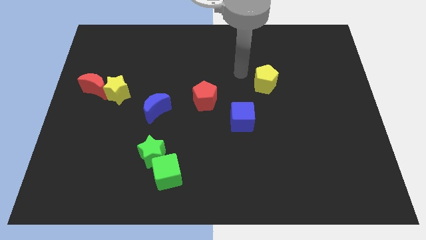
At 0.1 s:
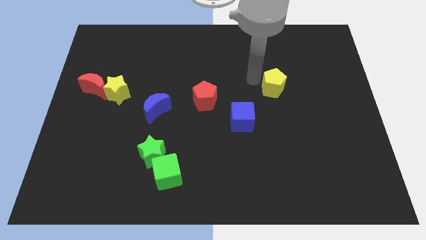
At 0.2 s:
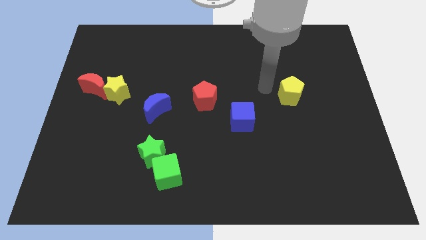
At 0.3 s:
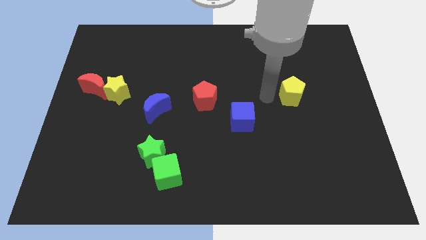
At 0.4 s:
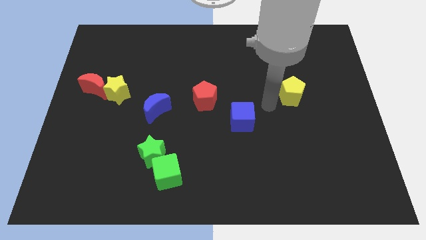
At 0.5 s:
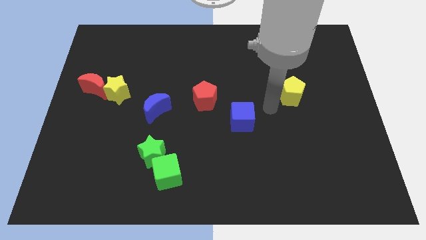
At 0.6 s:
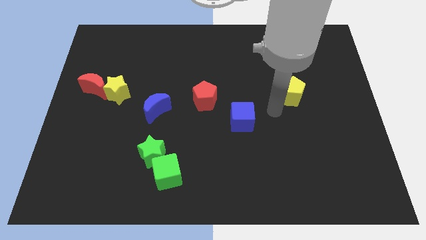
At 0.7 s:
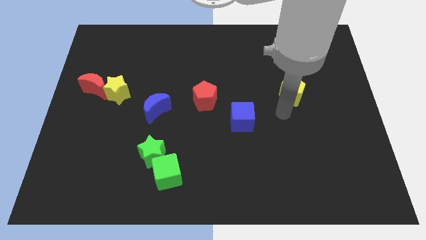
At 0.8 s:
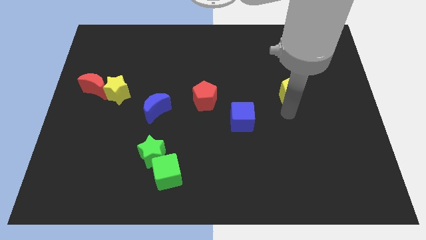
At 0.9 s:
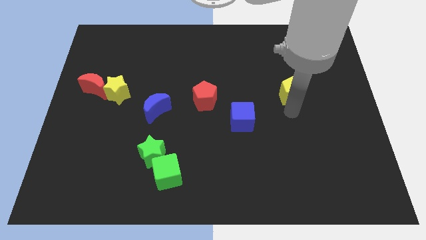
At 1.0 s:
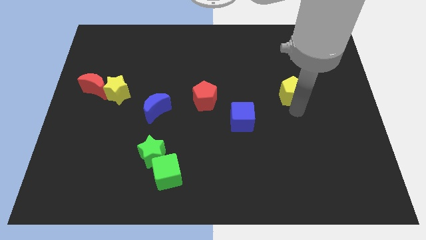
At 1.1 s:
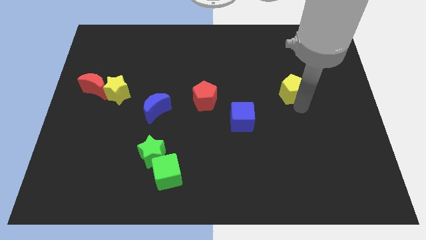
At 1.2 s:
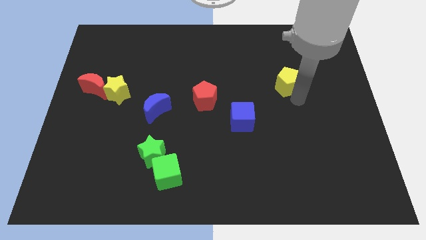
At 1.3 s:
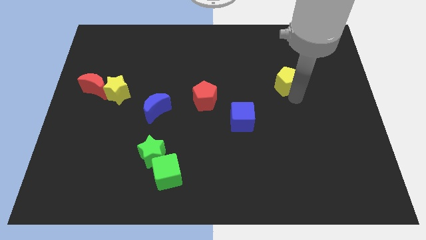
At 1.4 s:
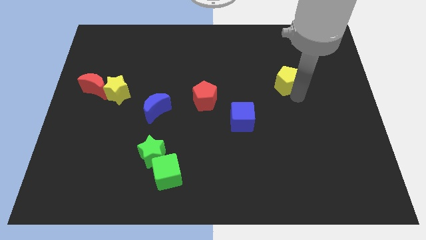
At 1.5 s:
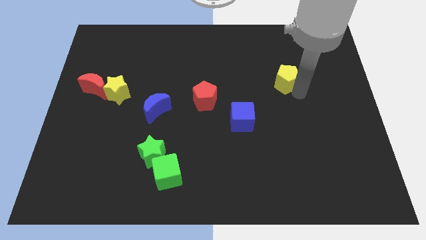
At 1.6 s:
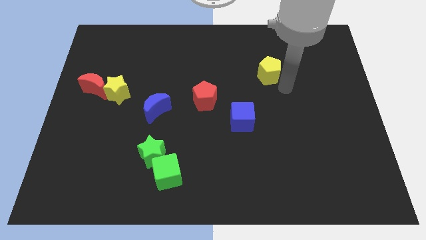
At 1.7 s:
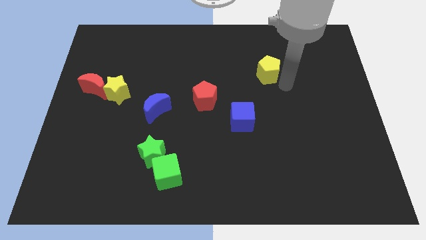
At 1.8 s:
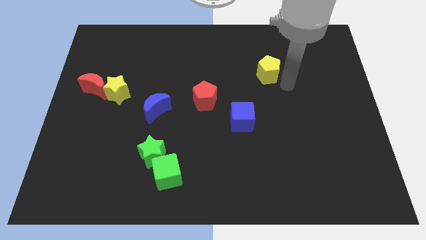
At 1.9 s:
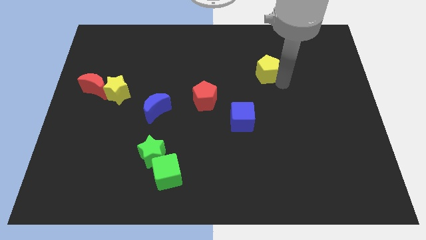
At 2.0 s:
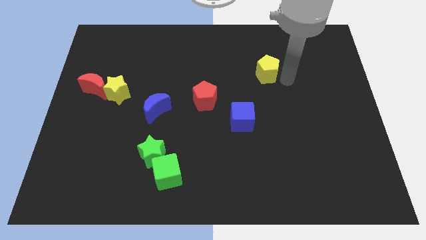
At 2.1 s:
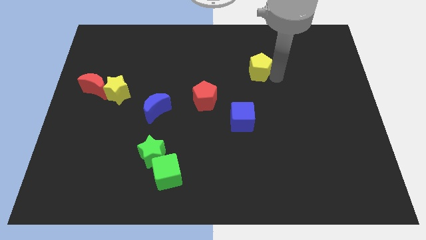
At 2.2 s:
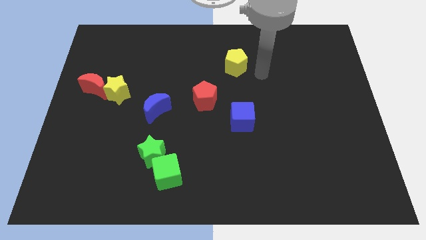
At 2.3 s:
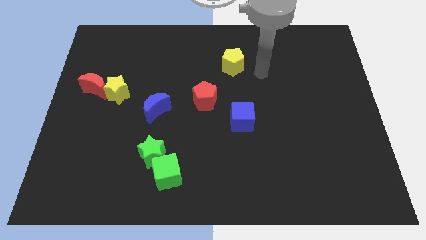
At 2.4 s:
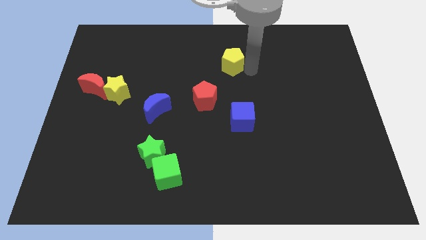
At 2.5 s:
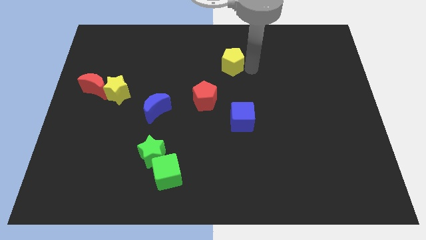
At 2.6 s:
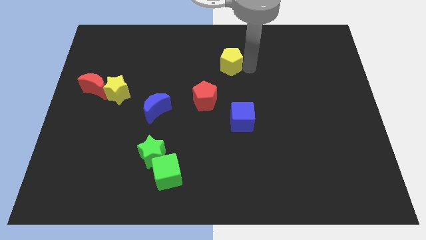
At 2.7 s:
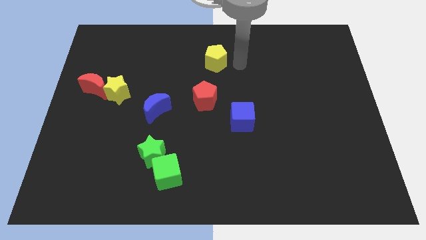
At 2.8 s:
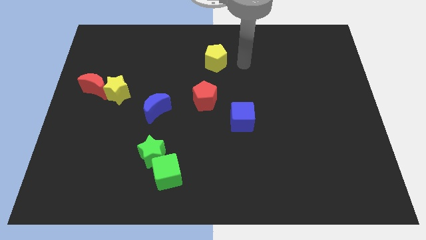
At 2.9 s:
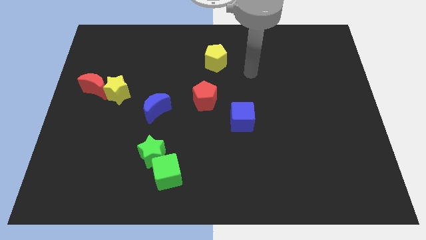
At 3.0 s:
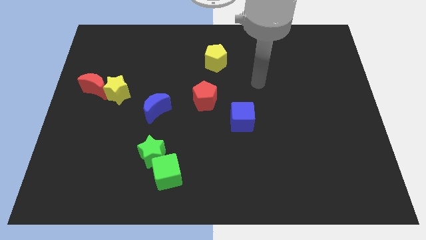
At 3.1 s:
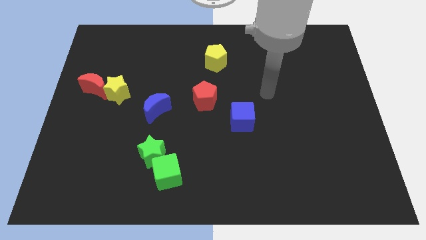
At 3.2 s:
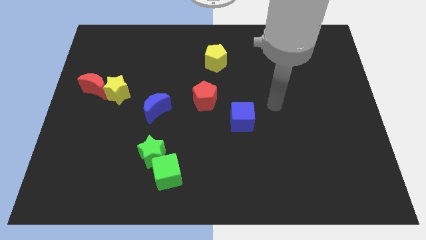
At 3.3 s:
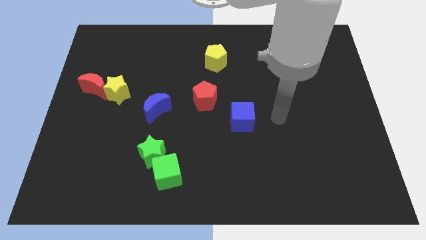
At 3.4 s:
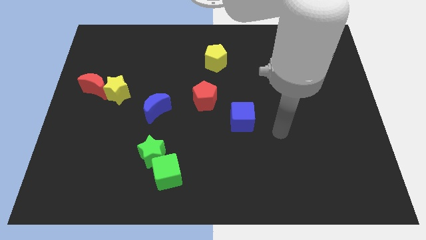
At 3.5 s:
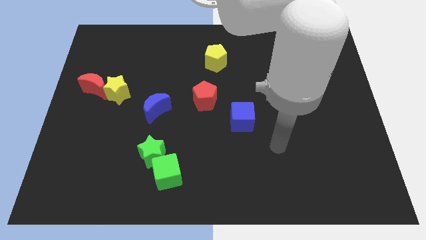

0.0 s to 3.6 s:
move the yellow pentagon diagonally top right to the blue moon

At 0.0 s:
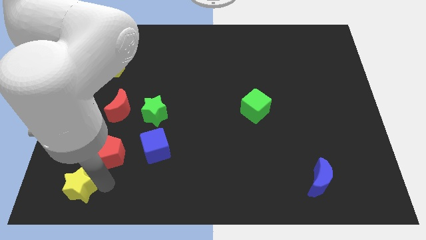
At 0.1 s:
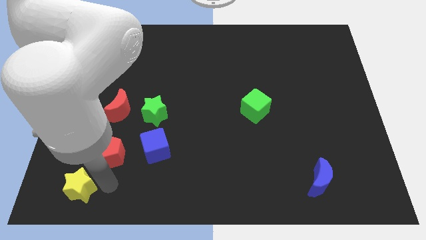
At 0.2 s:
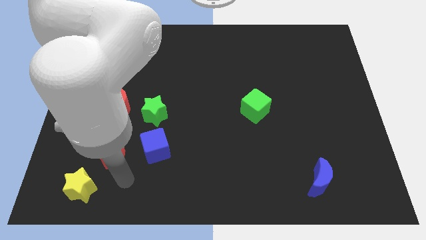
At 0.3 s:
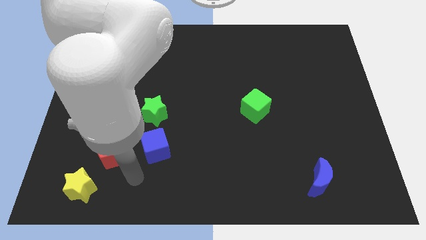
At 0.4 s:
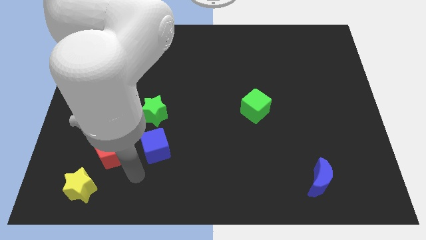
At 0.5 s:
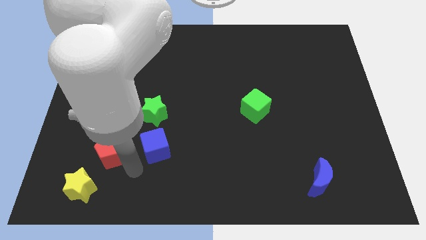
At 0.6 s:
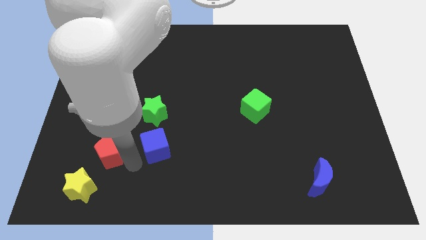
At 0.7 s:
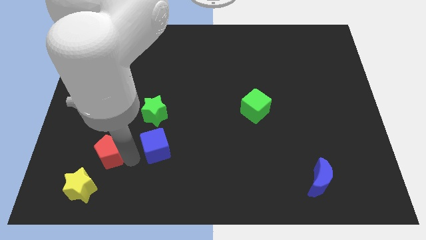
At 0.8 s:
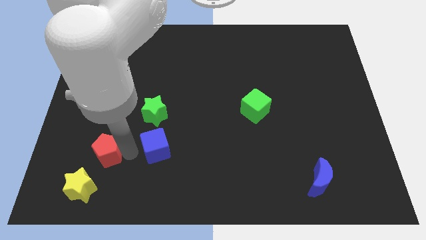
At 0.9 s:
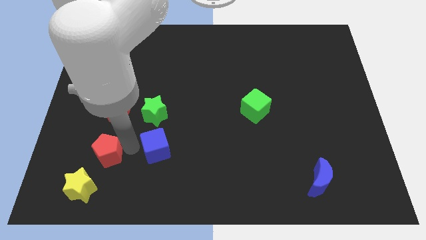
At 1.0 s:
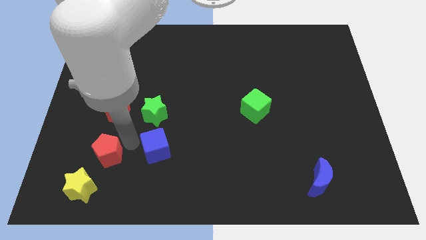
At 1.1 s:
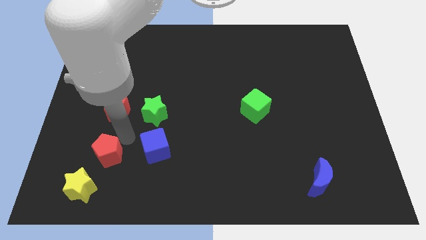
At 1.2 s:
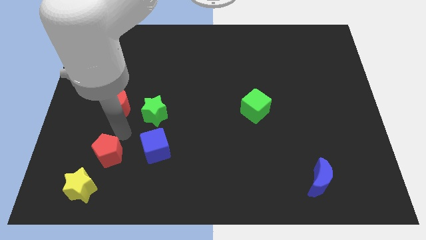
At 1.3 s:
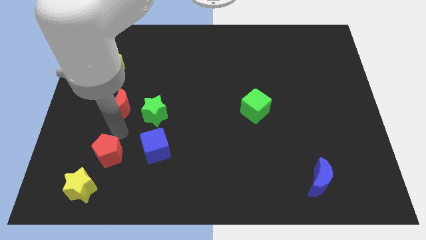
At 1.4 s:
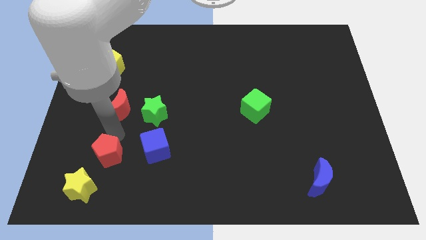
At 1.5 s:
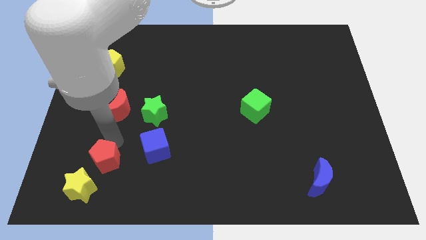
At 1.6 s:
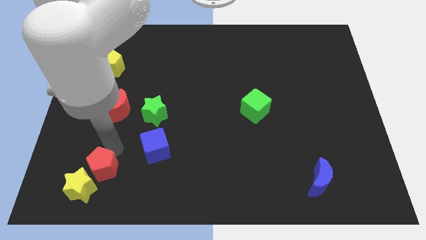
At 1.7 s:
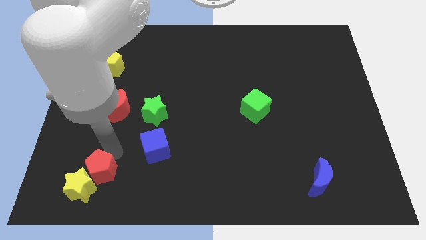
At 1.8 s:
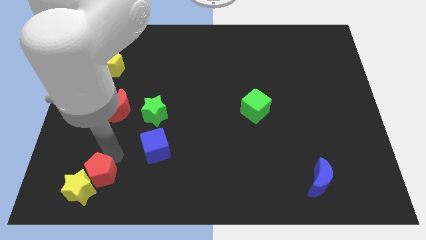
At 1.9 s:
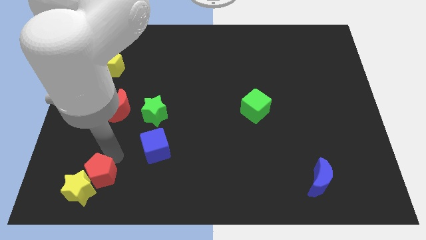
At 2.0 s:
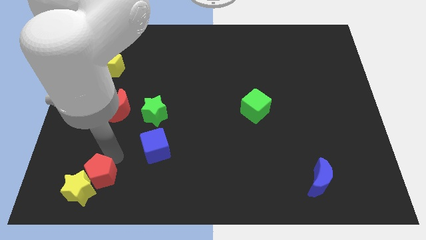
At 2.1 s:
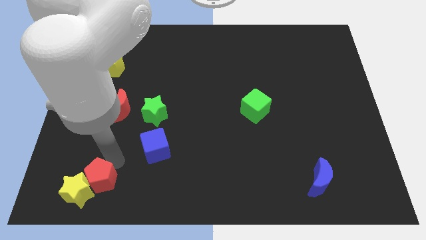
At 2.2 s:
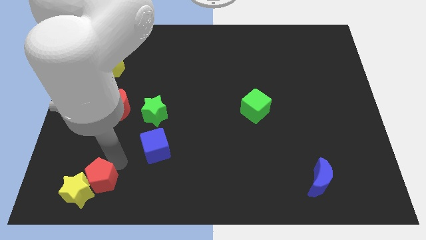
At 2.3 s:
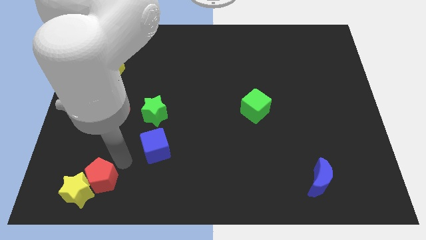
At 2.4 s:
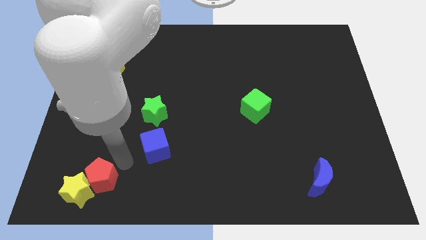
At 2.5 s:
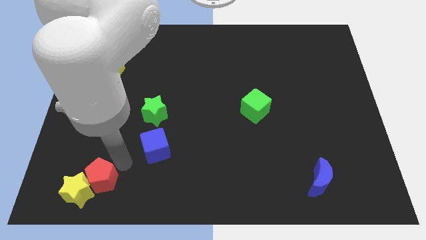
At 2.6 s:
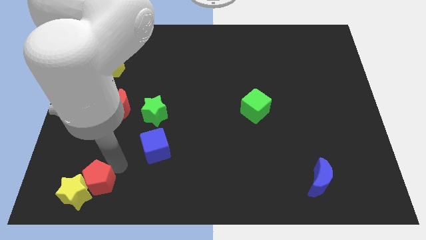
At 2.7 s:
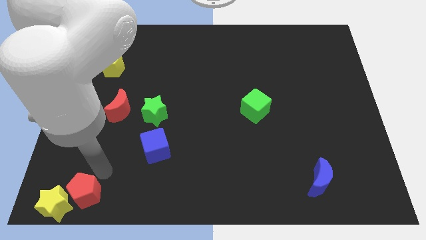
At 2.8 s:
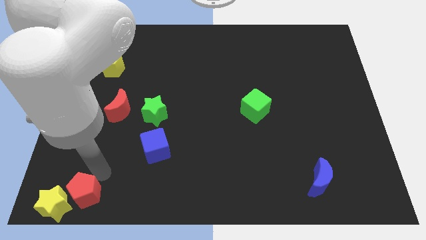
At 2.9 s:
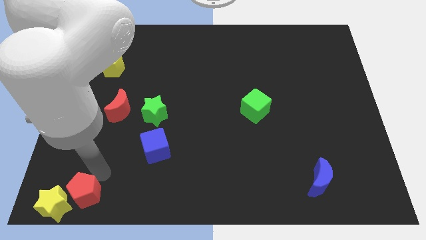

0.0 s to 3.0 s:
push the red pentagon to the top right of the yellow star

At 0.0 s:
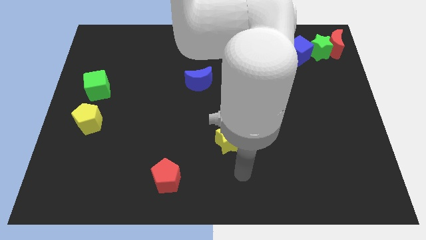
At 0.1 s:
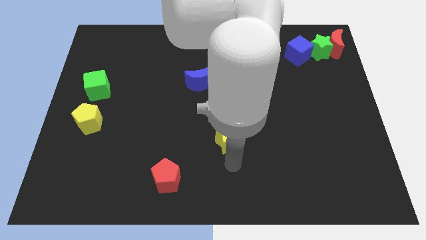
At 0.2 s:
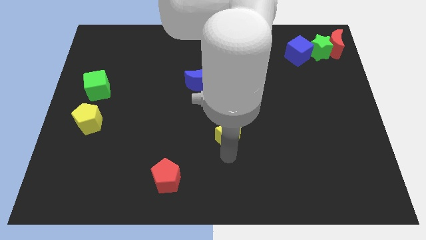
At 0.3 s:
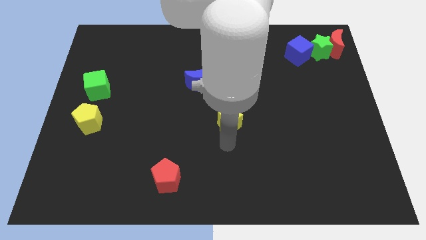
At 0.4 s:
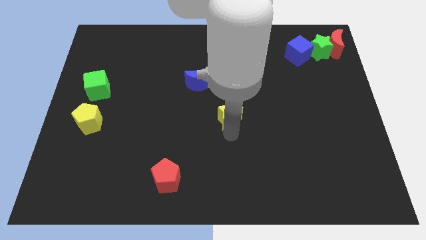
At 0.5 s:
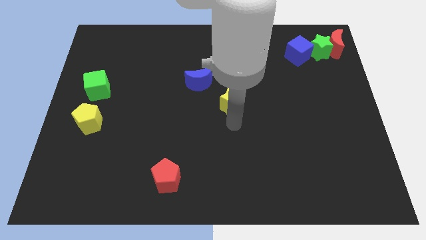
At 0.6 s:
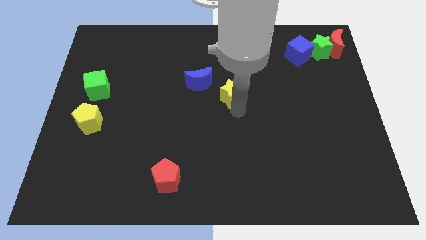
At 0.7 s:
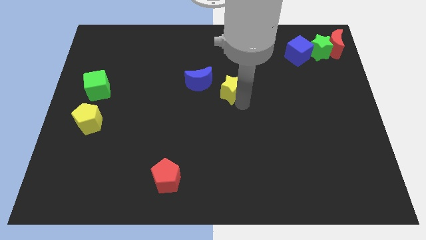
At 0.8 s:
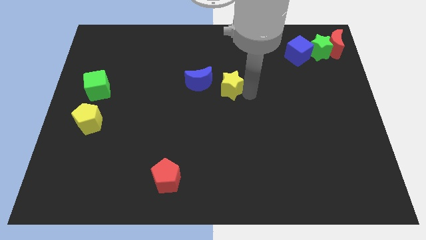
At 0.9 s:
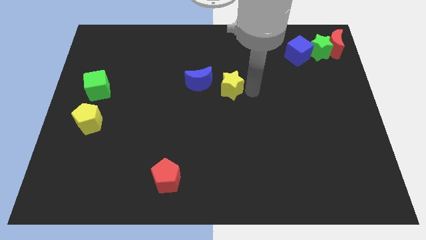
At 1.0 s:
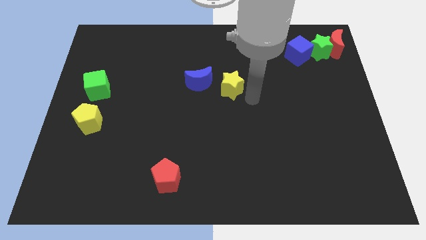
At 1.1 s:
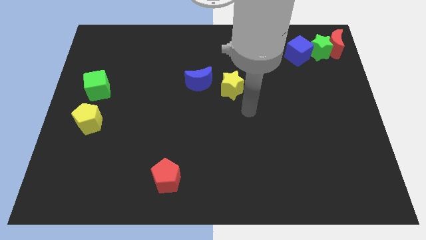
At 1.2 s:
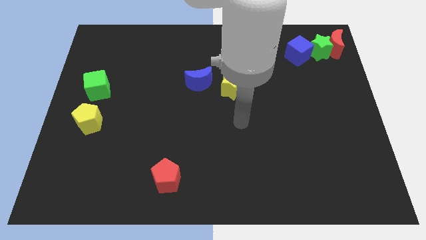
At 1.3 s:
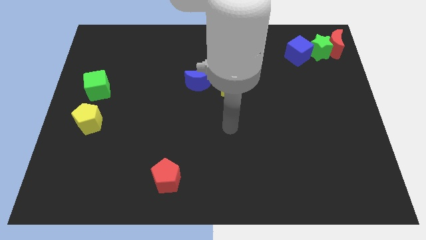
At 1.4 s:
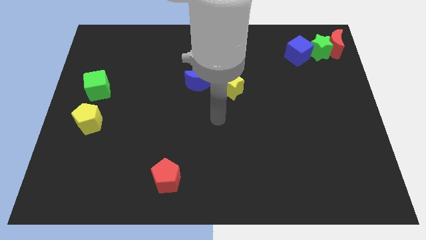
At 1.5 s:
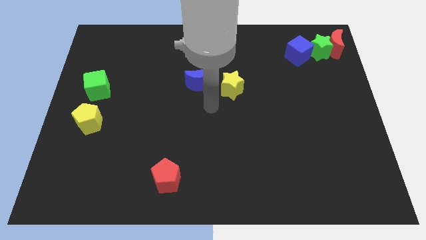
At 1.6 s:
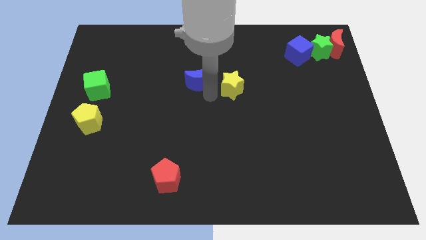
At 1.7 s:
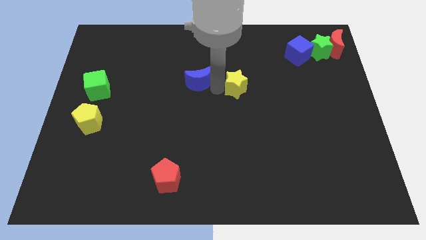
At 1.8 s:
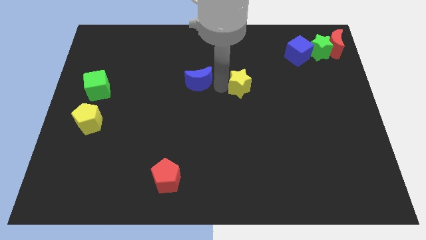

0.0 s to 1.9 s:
place yellow star to the right of blue moon

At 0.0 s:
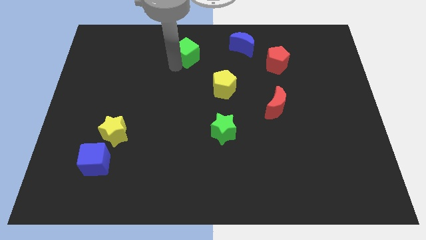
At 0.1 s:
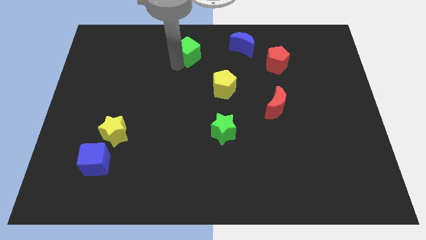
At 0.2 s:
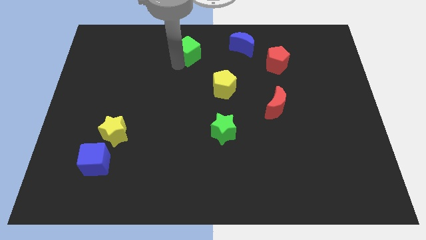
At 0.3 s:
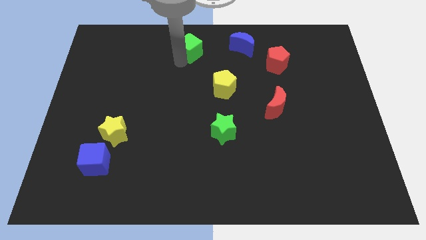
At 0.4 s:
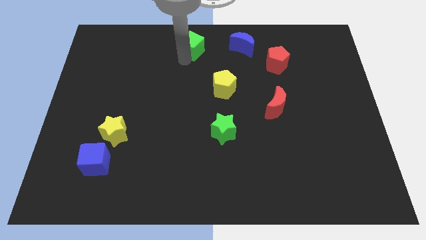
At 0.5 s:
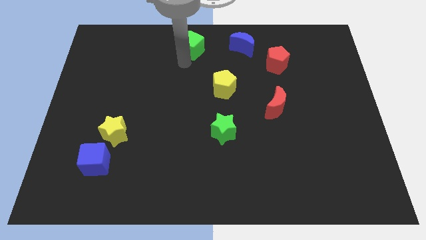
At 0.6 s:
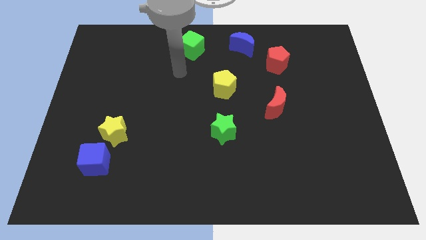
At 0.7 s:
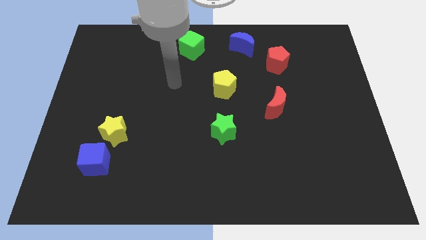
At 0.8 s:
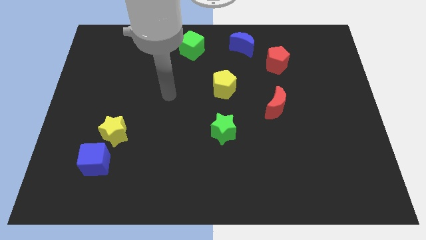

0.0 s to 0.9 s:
place the green cube to the left of the blue moon
